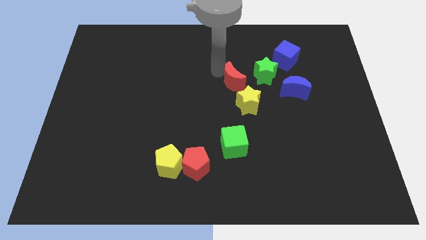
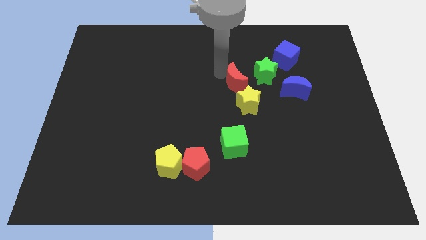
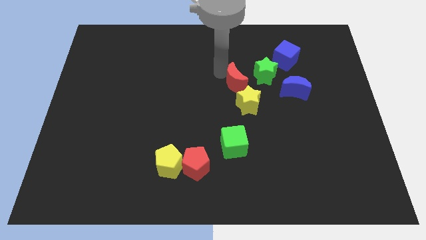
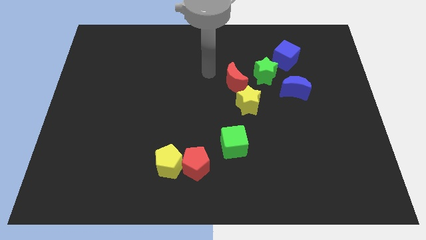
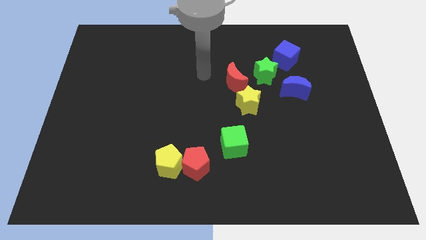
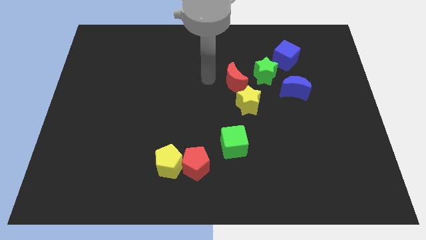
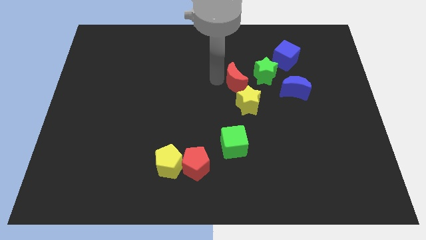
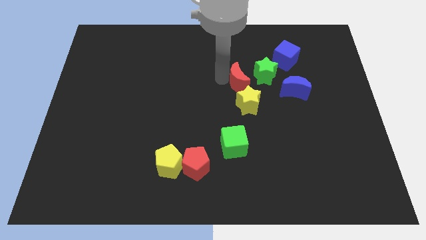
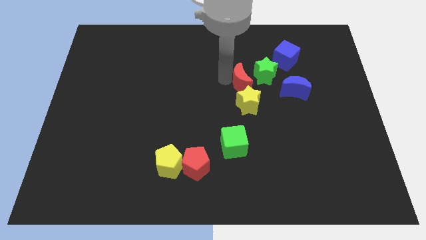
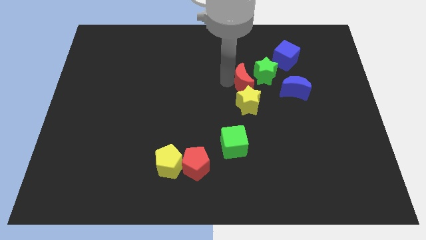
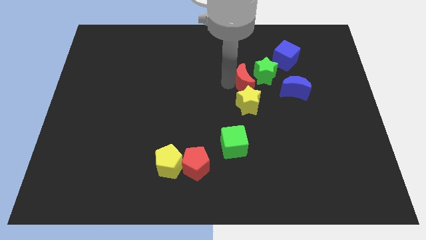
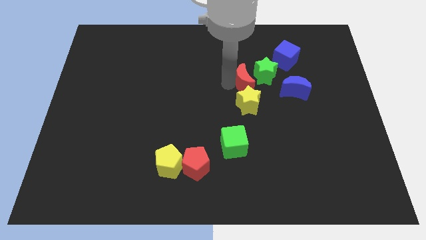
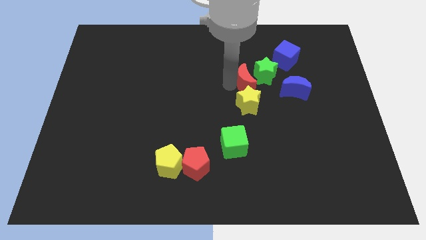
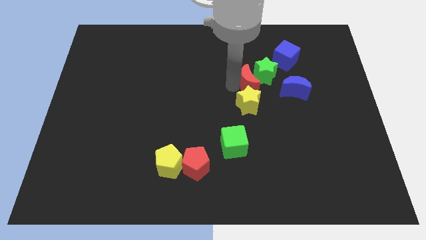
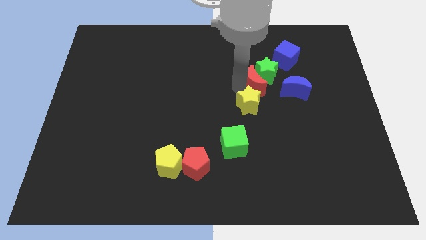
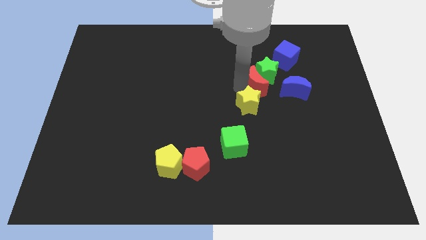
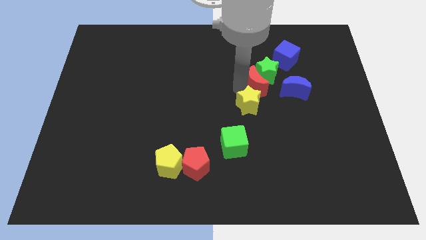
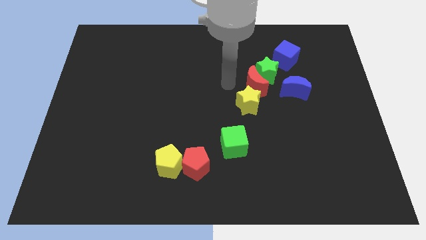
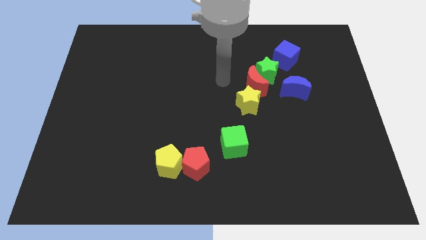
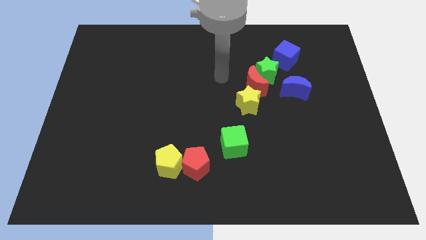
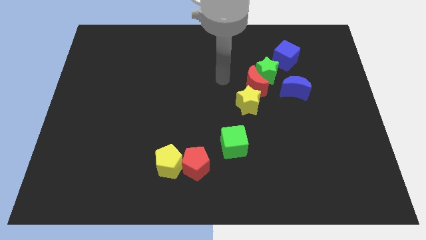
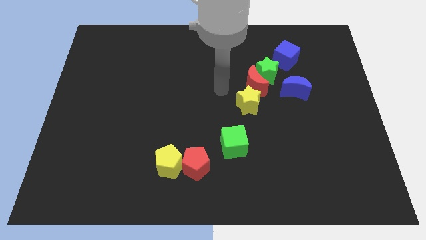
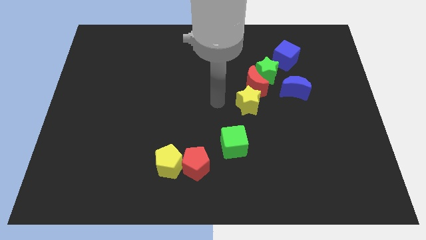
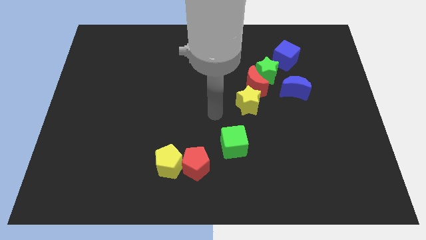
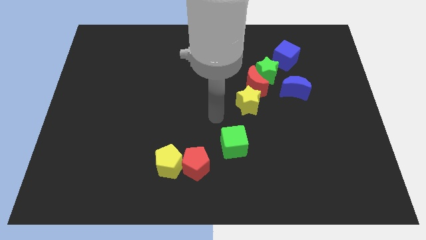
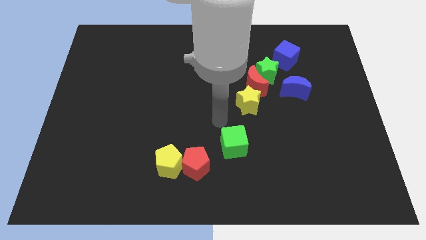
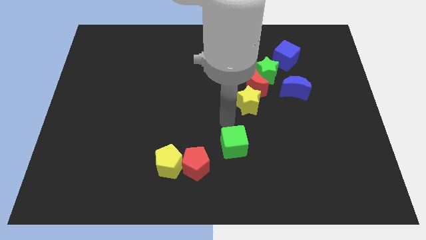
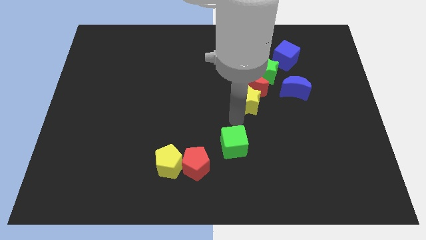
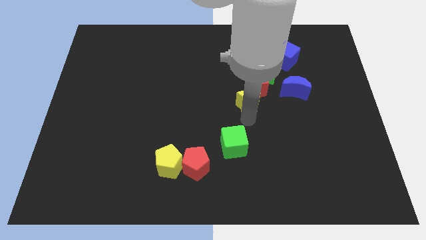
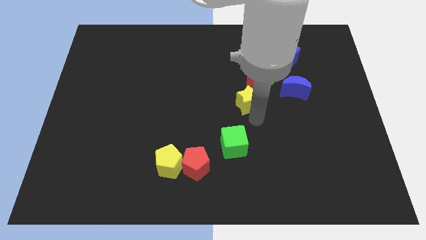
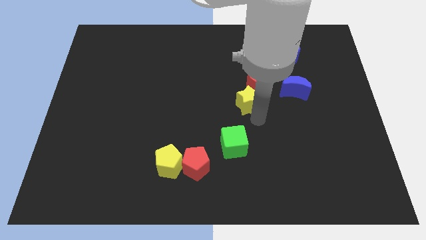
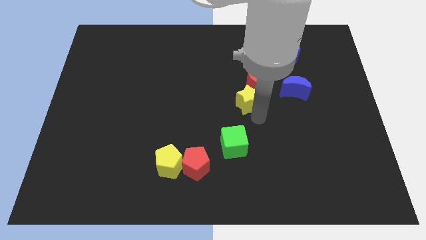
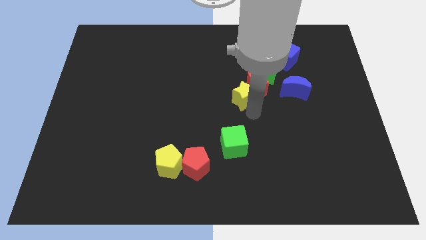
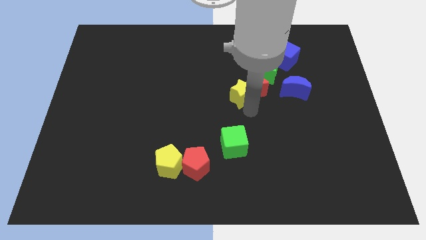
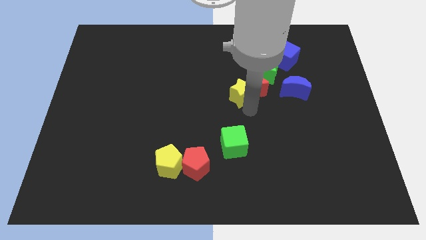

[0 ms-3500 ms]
place yellow star red crescent and green star blue cube diagonally in a line

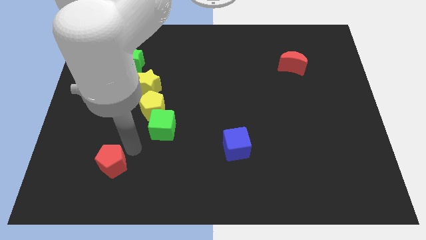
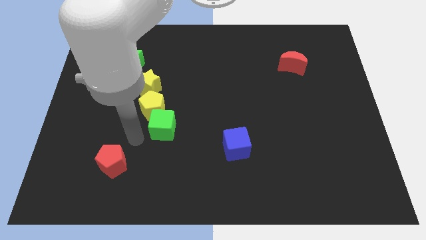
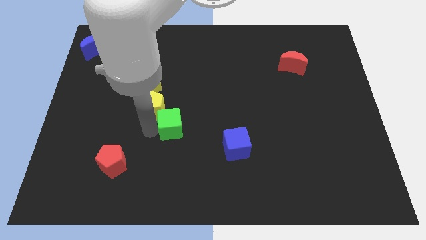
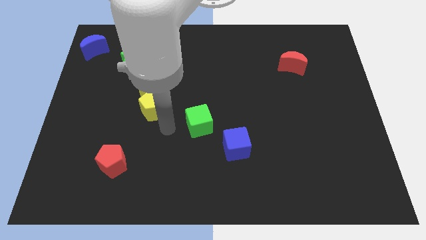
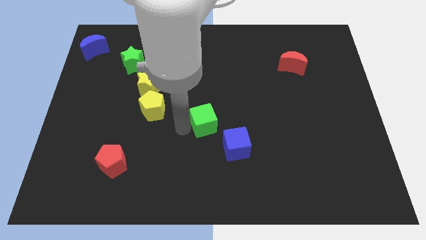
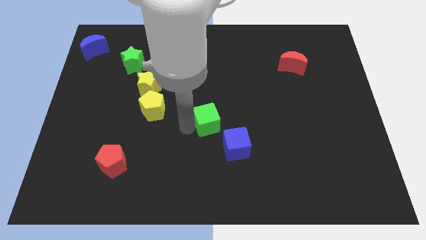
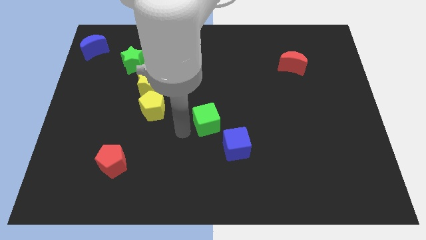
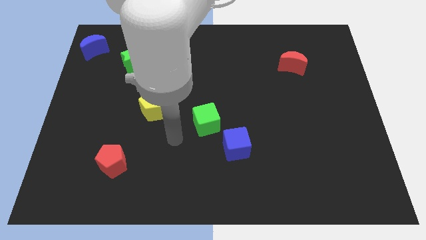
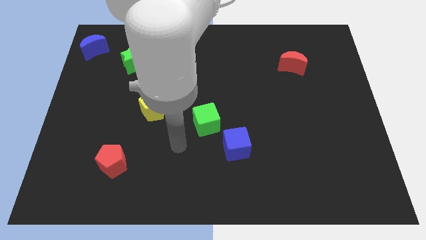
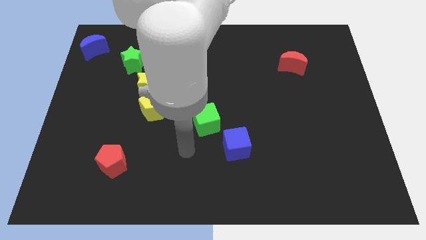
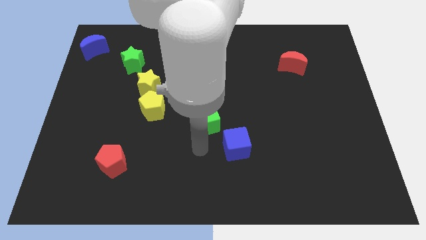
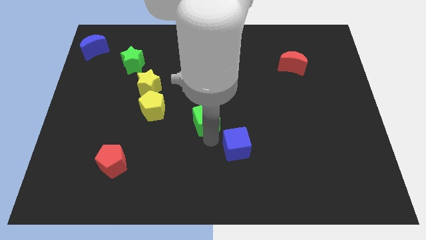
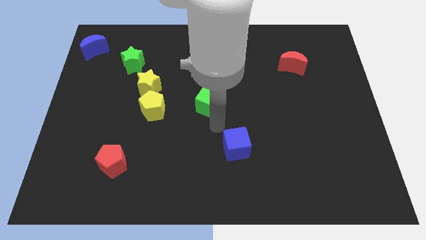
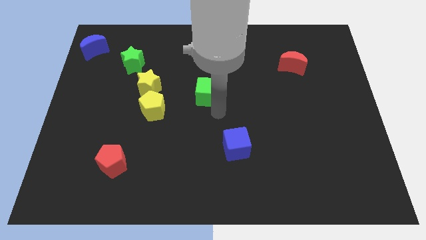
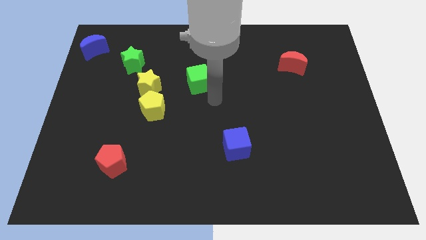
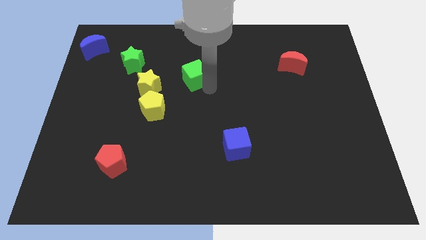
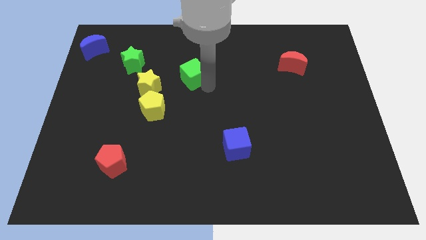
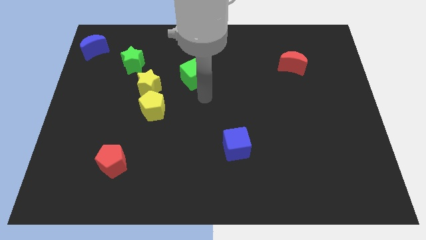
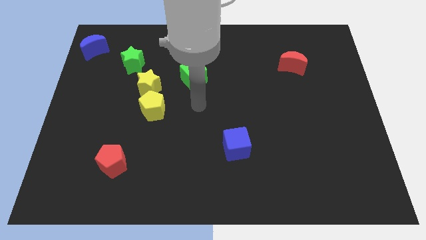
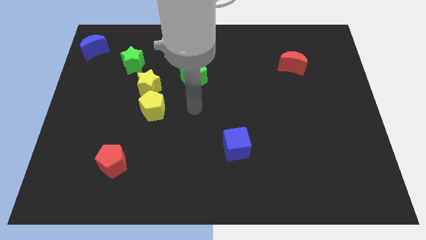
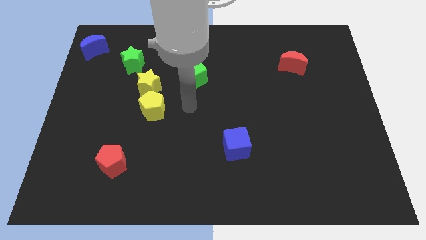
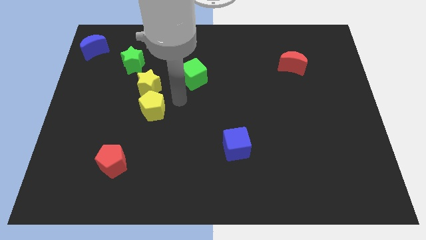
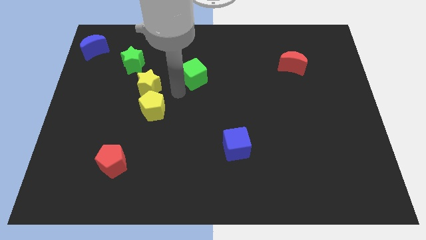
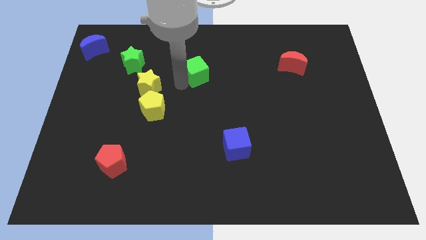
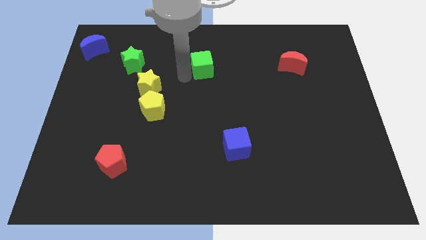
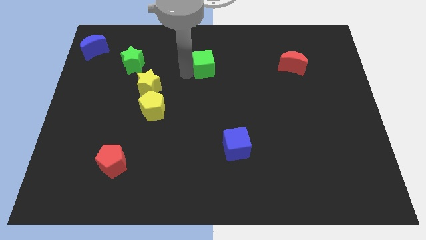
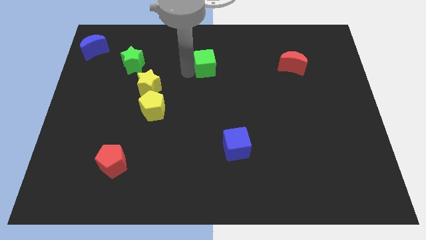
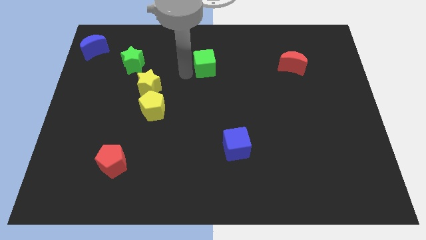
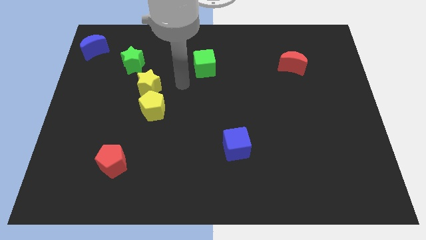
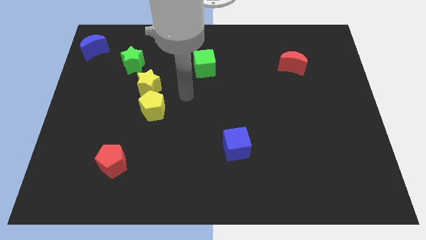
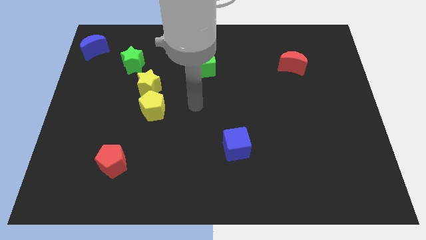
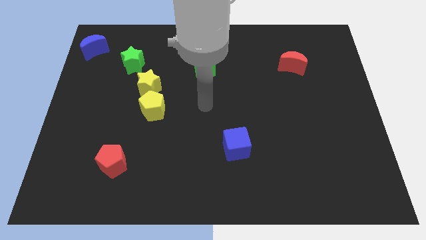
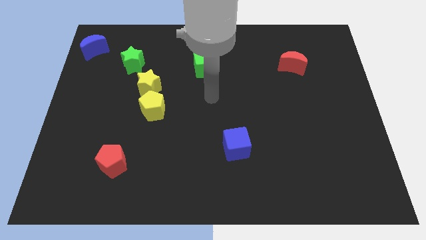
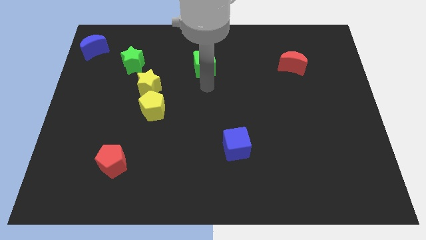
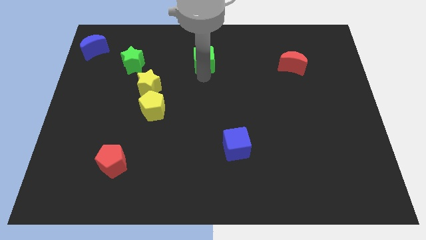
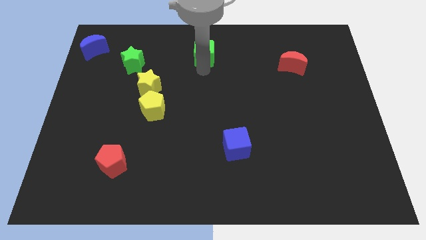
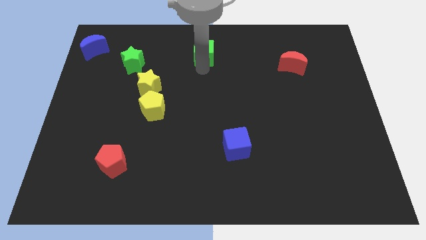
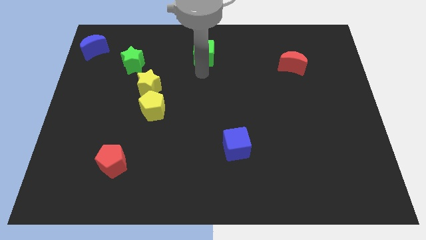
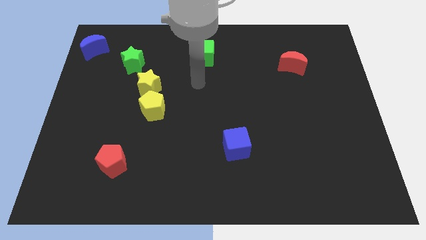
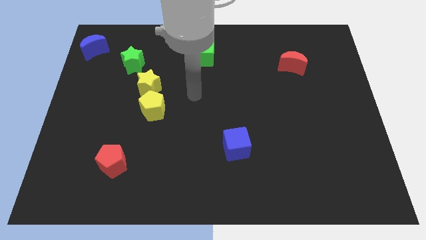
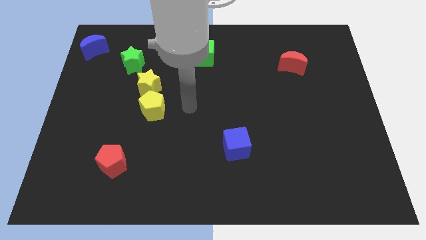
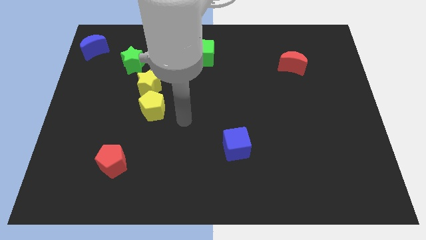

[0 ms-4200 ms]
move the green cube to the top center of the board

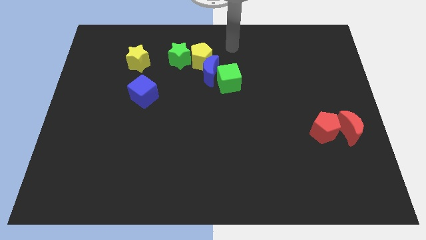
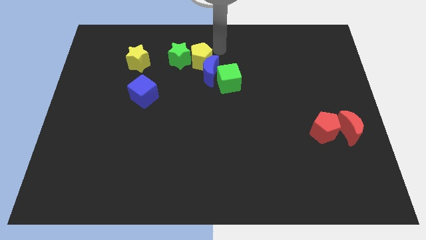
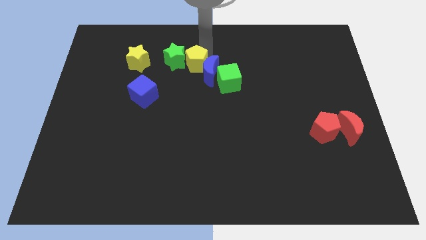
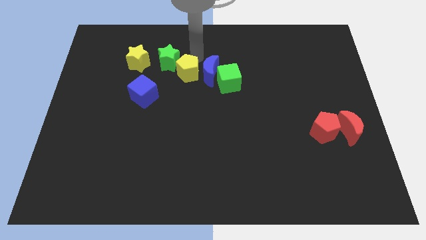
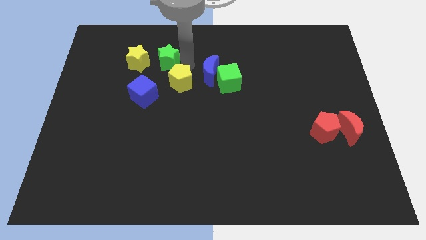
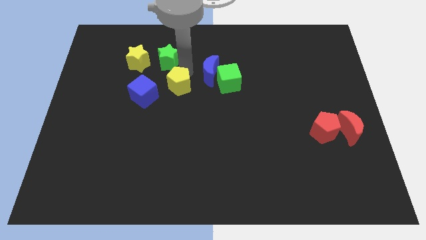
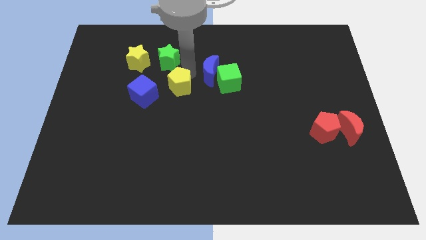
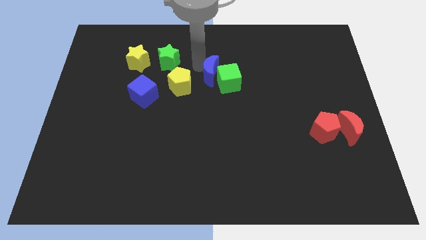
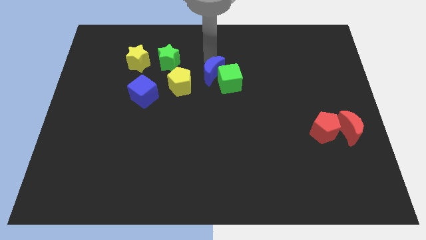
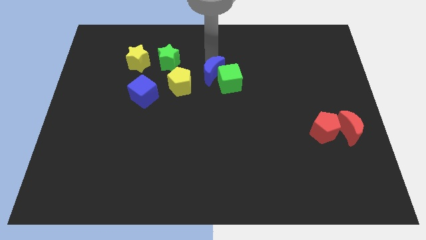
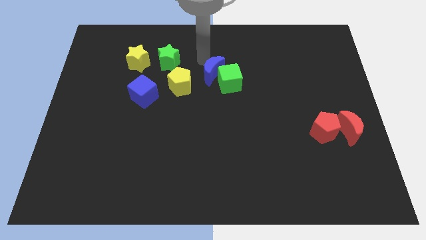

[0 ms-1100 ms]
move yellow pentagon away from the green star and blue moon

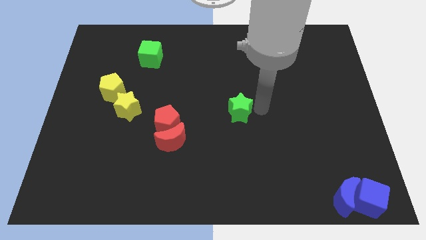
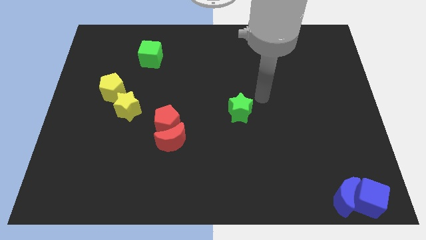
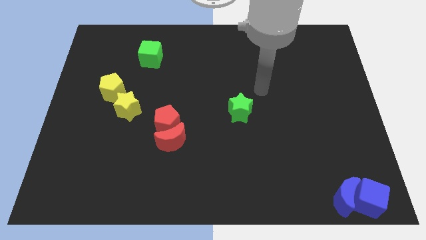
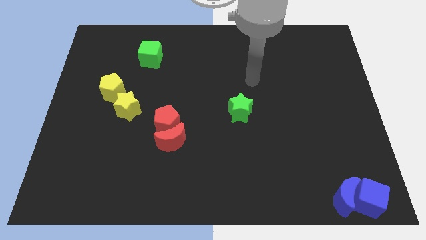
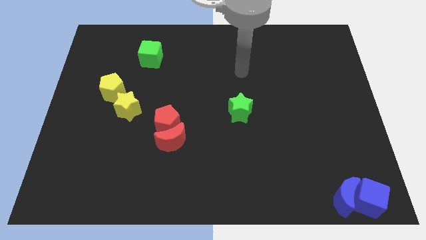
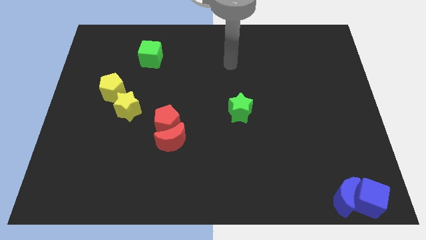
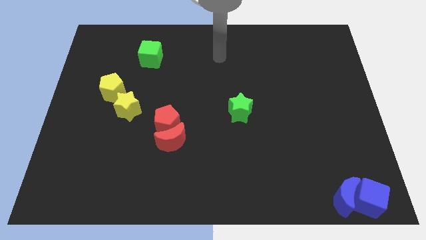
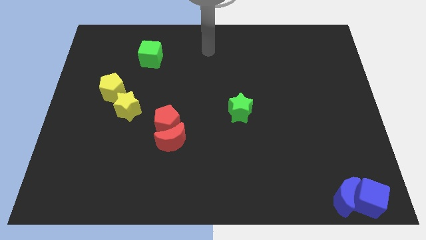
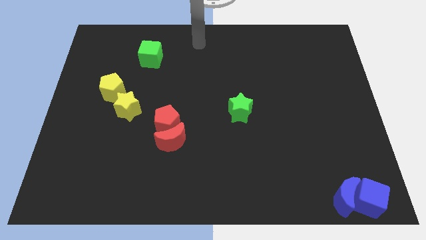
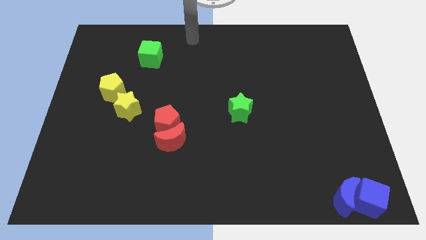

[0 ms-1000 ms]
move your arm away from the green star
